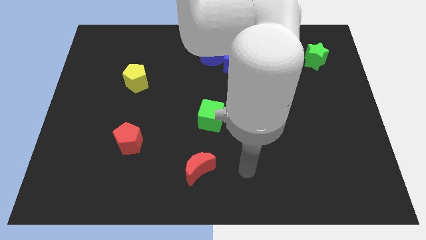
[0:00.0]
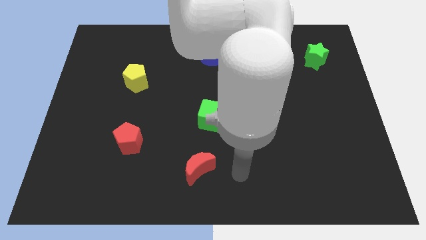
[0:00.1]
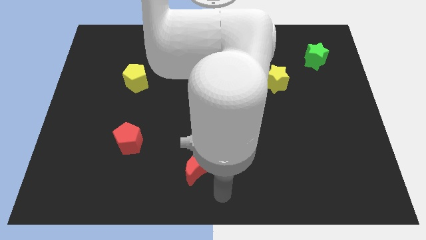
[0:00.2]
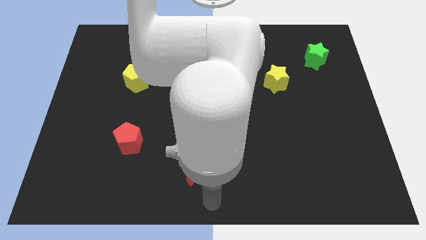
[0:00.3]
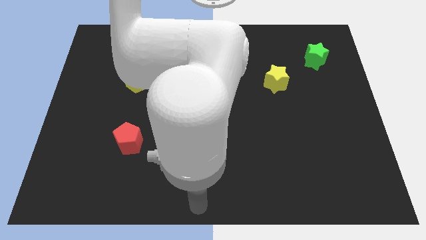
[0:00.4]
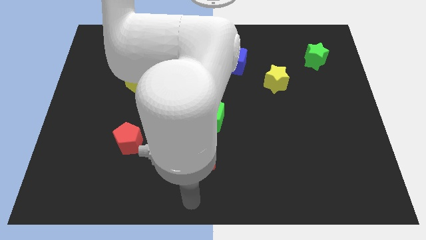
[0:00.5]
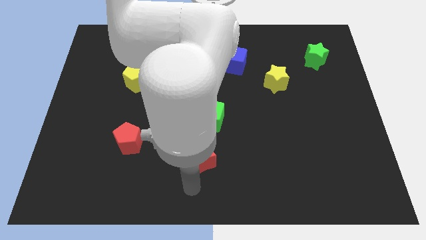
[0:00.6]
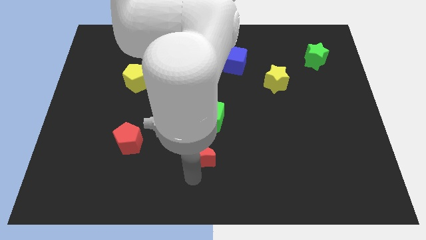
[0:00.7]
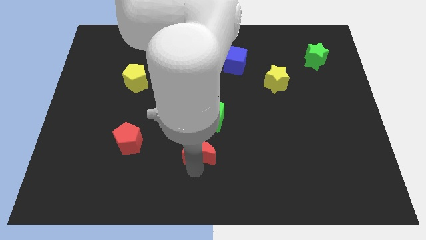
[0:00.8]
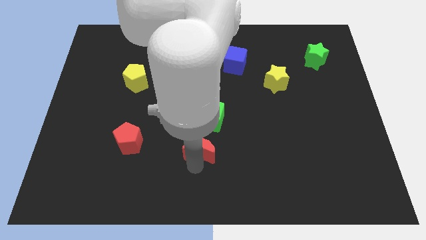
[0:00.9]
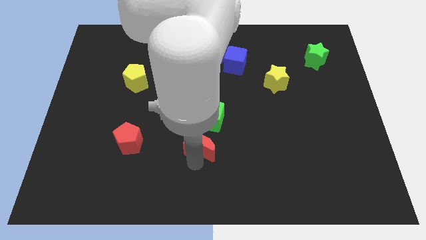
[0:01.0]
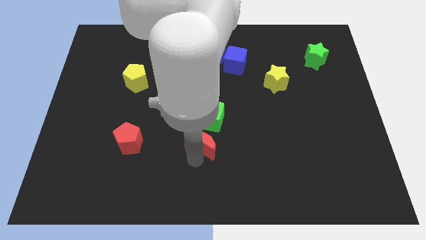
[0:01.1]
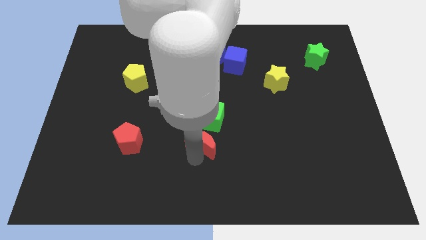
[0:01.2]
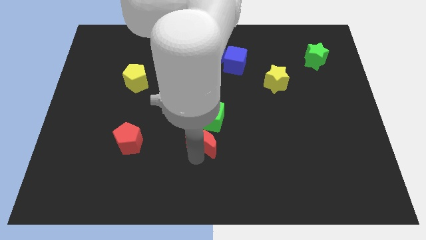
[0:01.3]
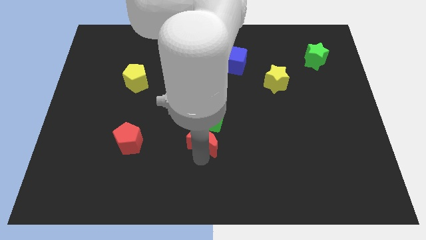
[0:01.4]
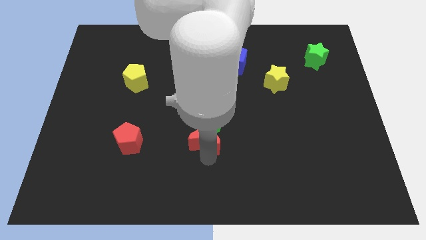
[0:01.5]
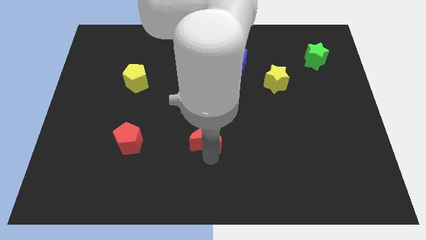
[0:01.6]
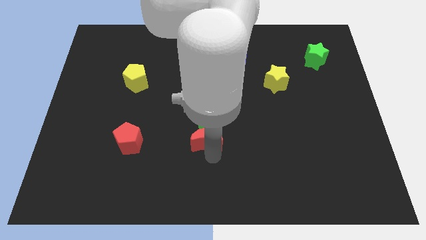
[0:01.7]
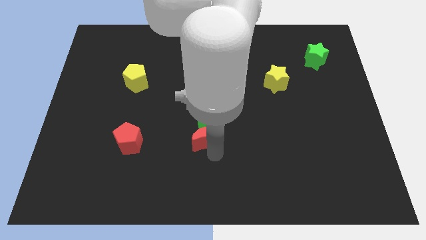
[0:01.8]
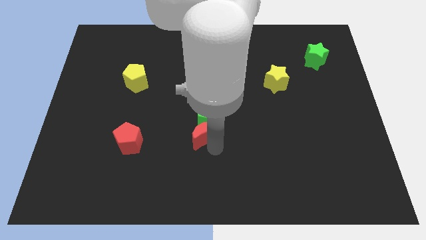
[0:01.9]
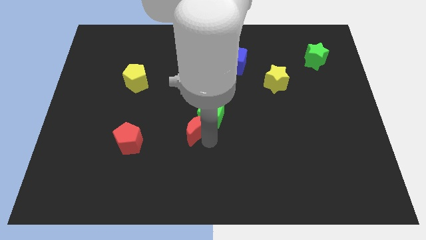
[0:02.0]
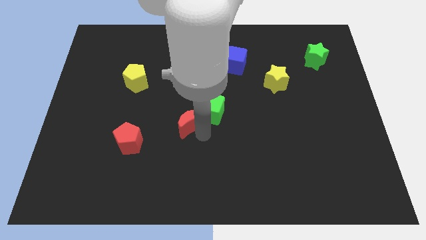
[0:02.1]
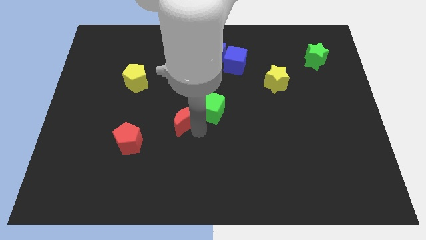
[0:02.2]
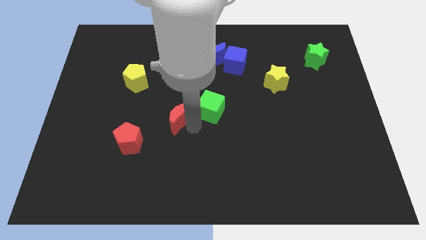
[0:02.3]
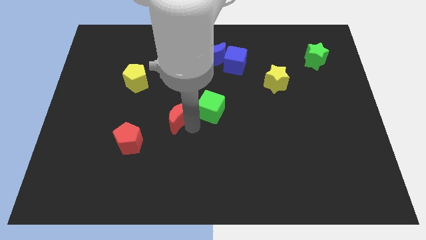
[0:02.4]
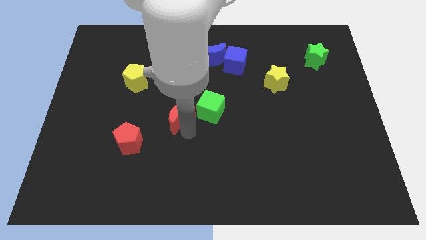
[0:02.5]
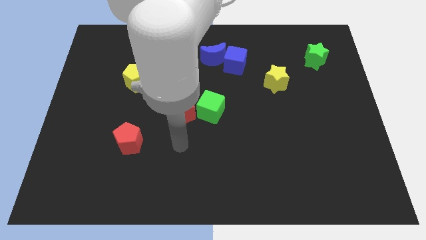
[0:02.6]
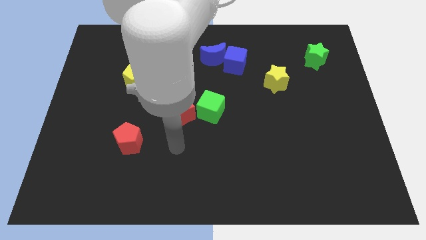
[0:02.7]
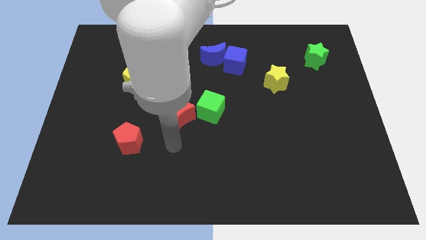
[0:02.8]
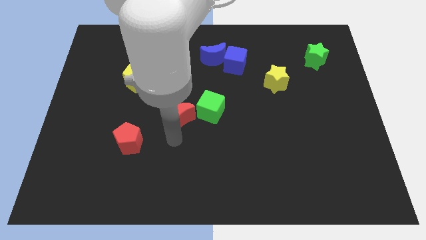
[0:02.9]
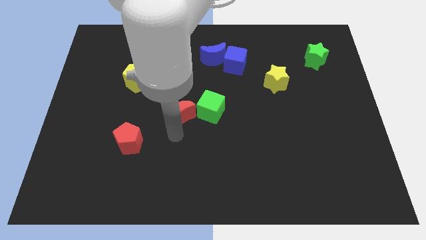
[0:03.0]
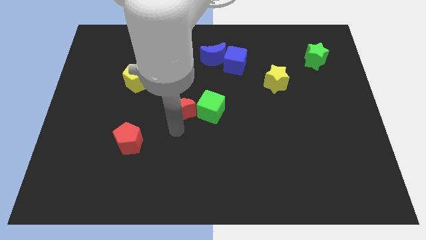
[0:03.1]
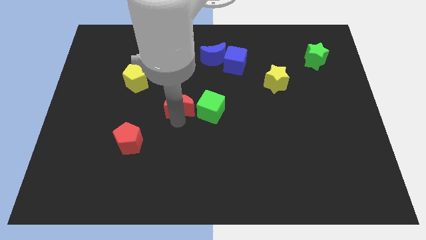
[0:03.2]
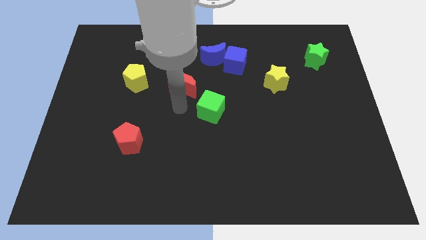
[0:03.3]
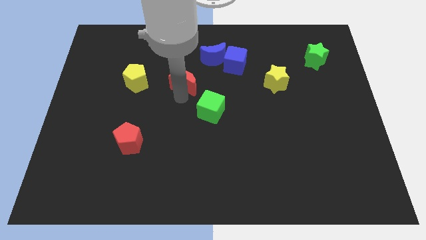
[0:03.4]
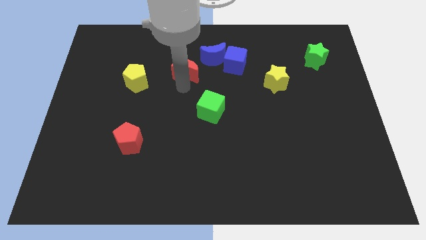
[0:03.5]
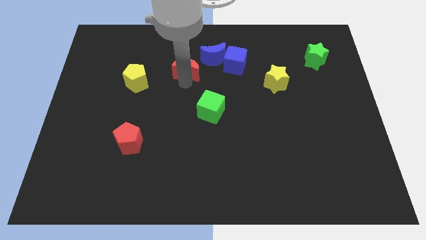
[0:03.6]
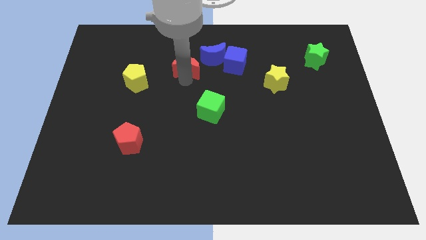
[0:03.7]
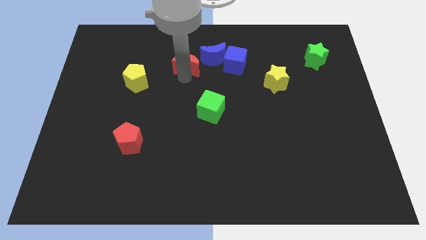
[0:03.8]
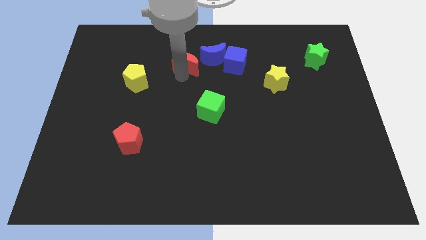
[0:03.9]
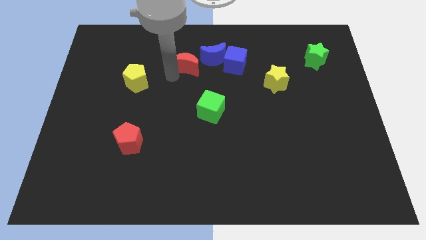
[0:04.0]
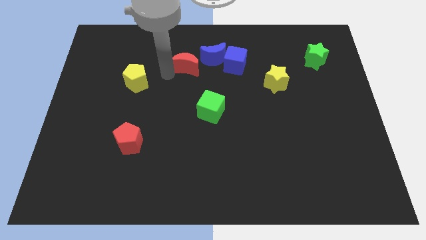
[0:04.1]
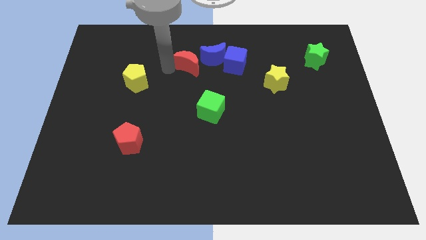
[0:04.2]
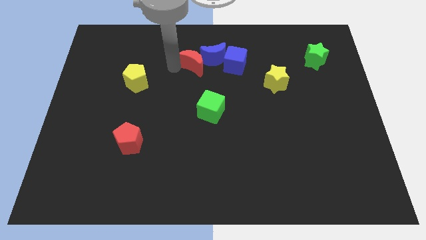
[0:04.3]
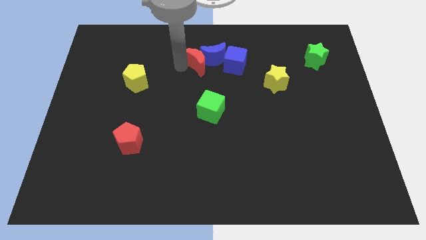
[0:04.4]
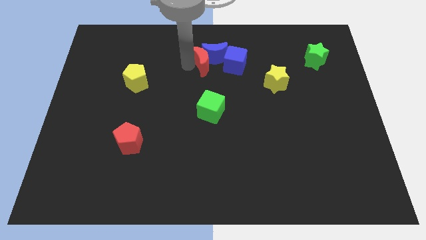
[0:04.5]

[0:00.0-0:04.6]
put the red moon close to the blue moon

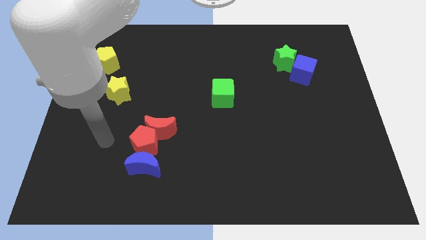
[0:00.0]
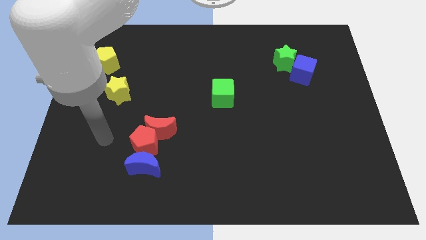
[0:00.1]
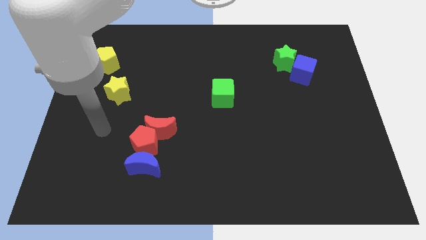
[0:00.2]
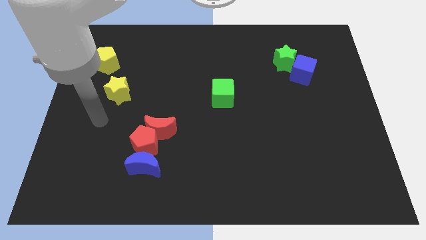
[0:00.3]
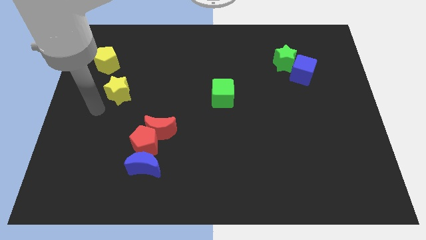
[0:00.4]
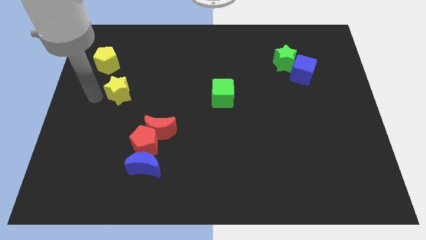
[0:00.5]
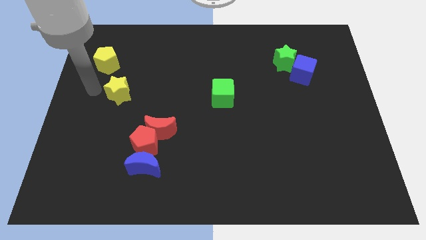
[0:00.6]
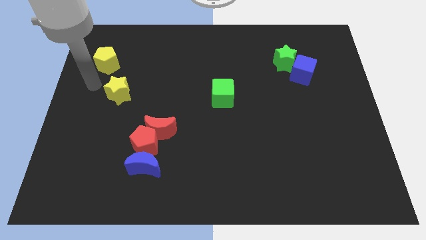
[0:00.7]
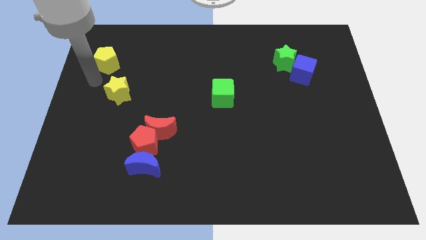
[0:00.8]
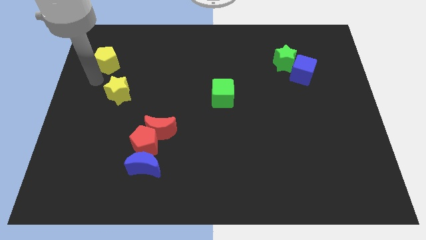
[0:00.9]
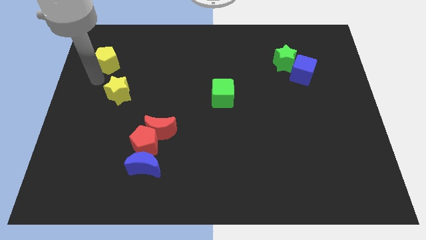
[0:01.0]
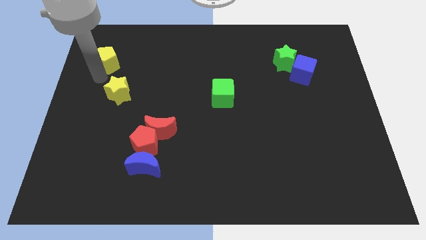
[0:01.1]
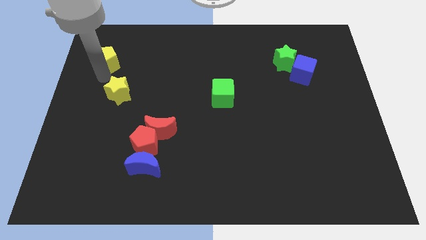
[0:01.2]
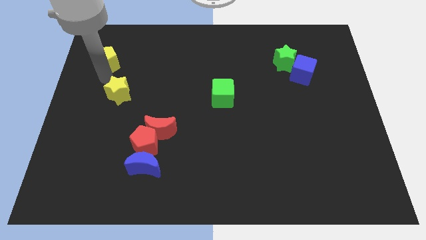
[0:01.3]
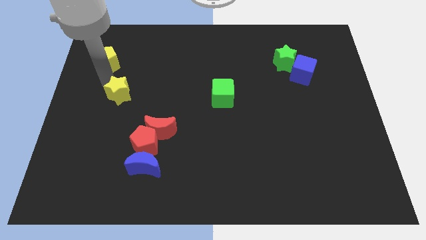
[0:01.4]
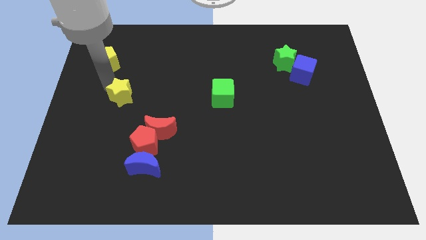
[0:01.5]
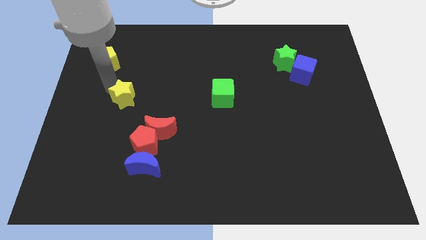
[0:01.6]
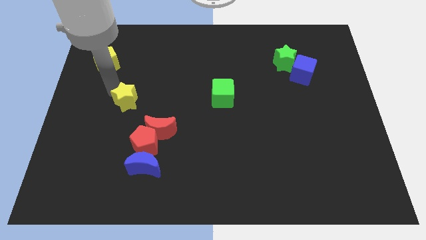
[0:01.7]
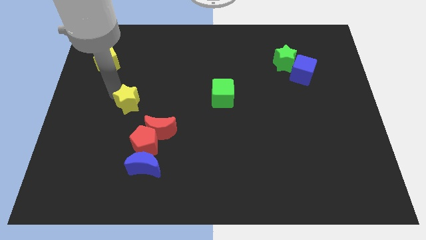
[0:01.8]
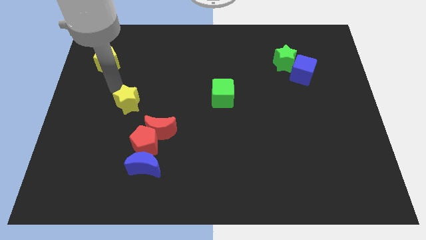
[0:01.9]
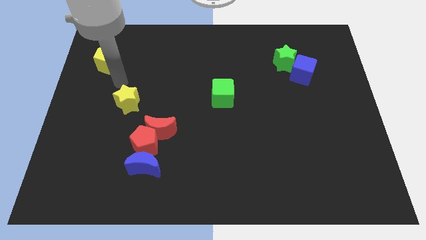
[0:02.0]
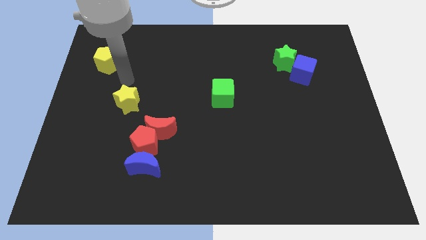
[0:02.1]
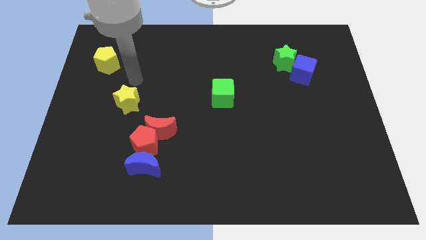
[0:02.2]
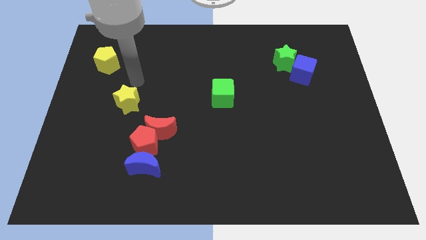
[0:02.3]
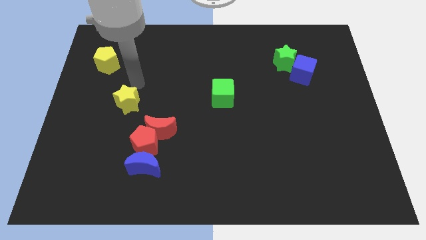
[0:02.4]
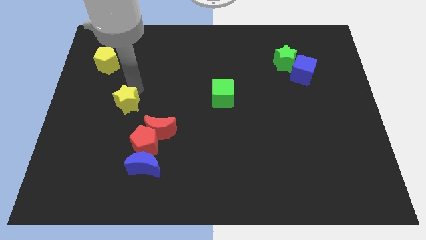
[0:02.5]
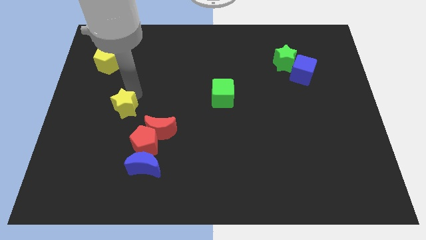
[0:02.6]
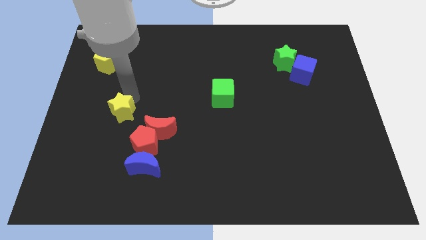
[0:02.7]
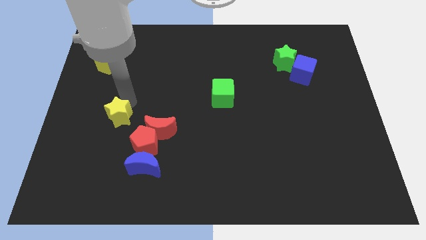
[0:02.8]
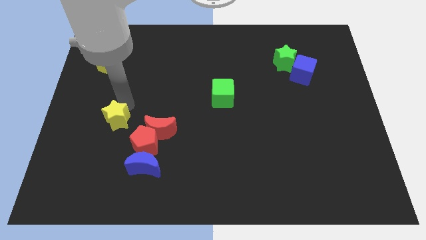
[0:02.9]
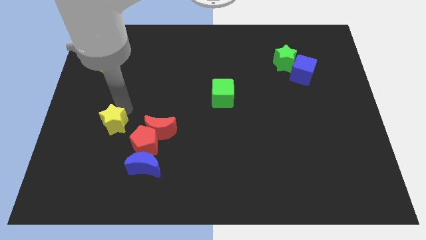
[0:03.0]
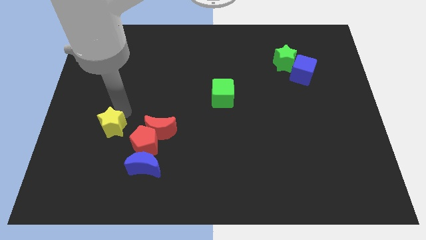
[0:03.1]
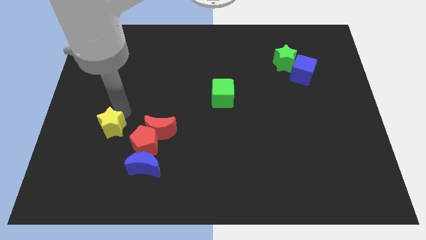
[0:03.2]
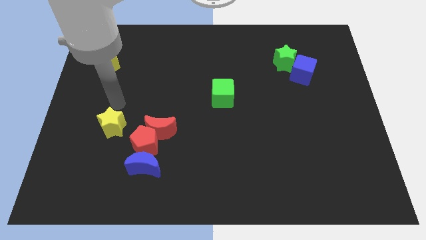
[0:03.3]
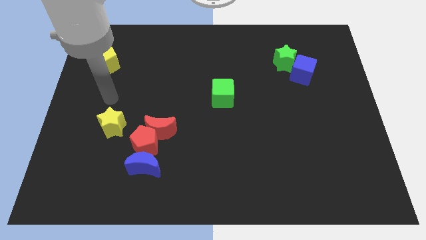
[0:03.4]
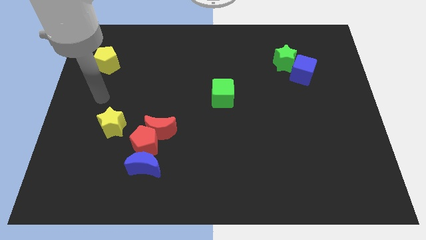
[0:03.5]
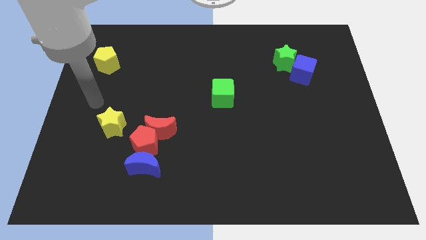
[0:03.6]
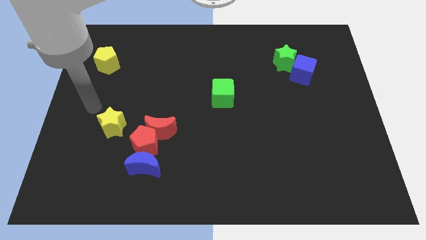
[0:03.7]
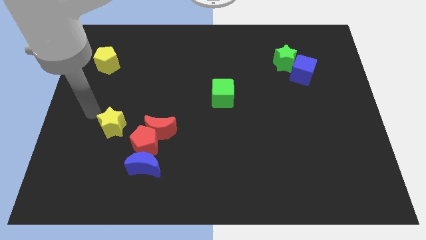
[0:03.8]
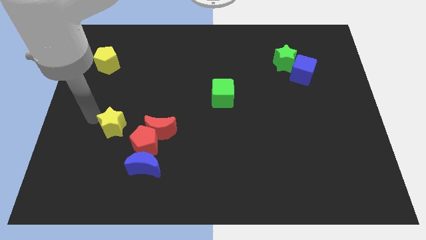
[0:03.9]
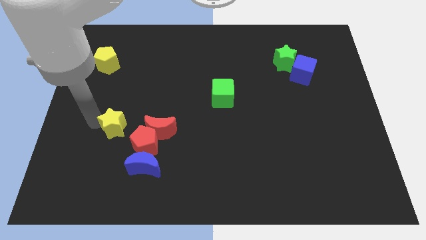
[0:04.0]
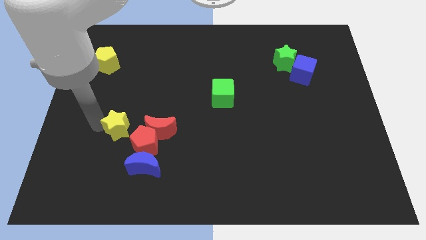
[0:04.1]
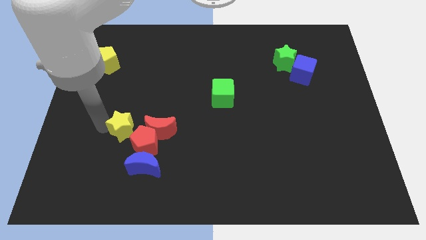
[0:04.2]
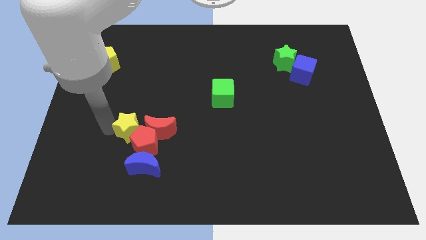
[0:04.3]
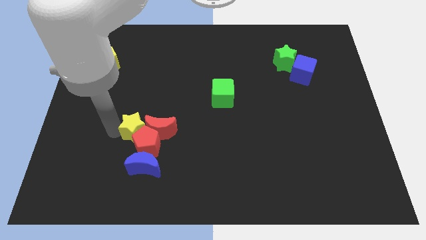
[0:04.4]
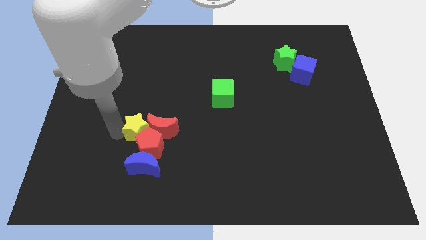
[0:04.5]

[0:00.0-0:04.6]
move the yellow star close to the red pentagon
